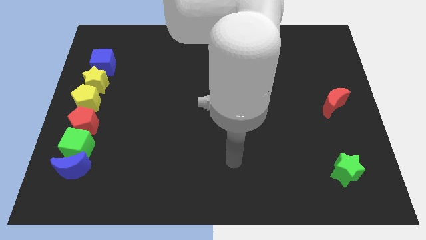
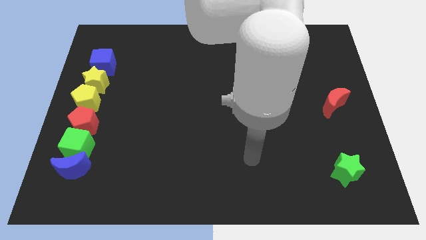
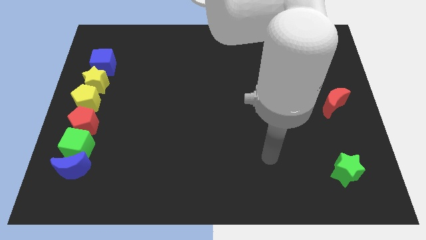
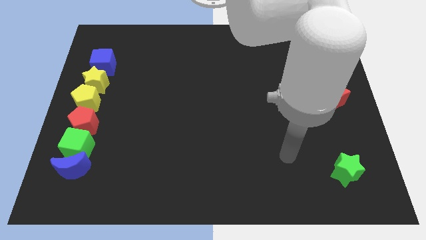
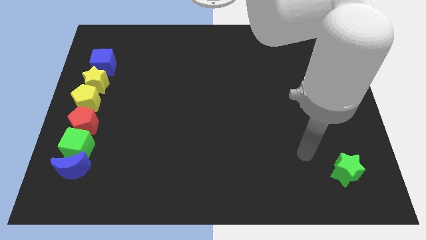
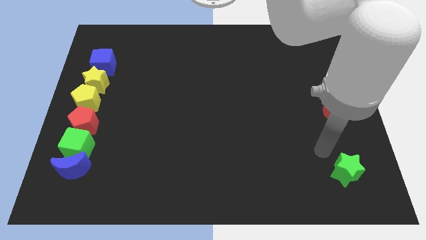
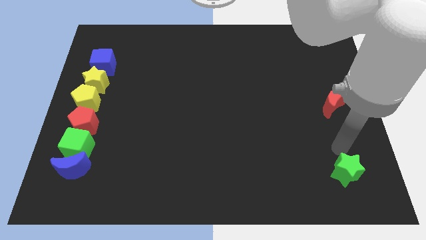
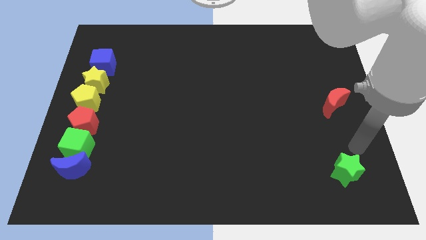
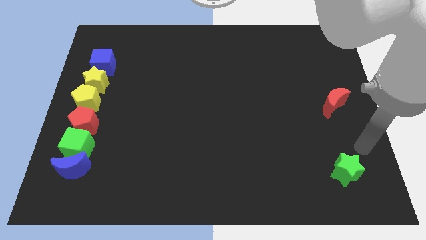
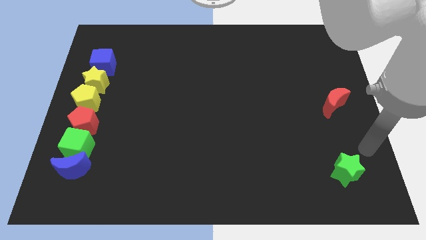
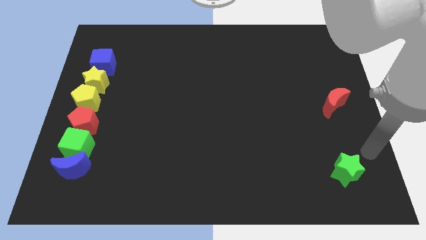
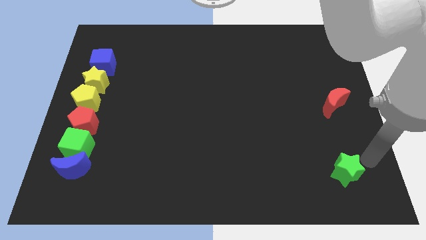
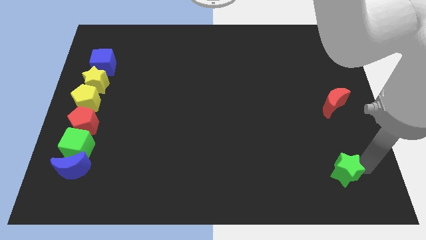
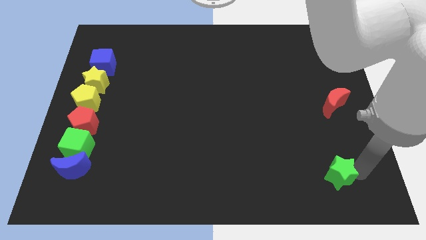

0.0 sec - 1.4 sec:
point your arm above green star

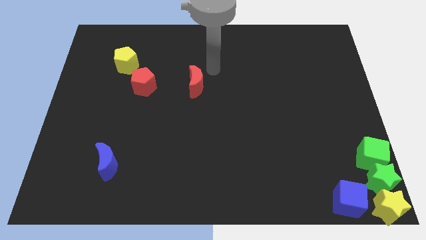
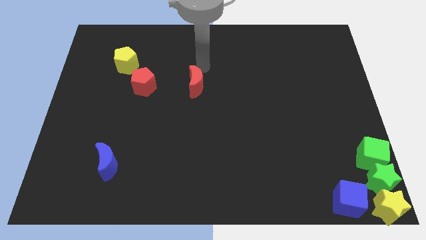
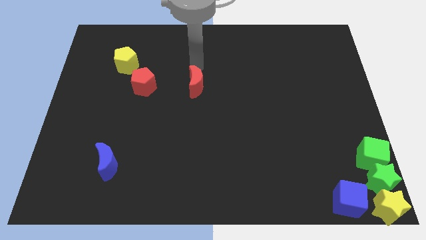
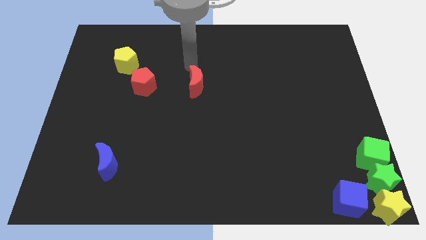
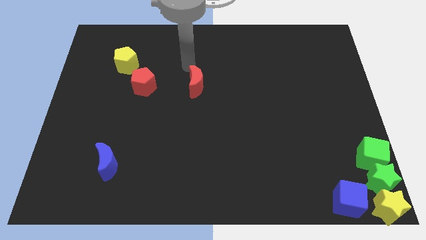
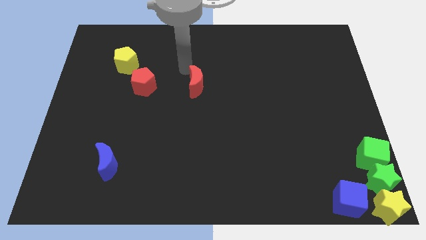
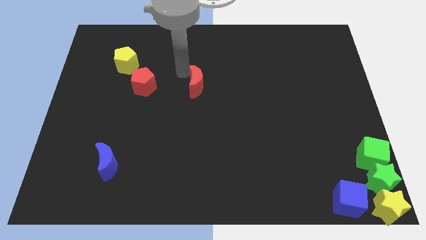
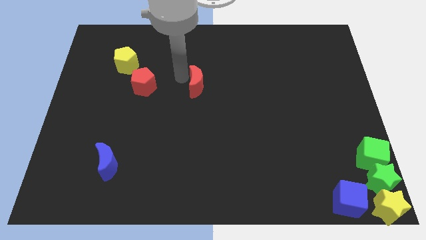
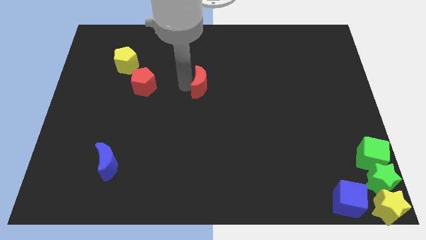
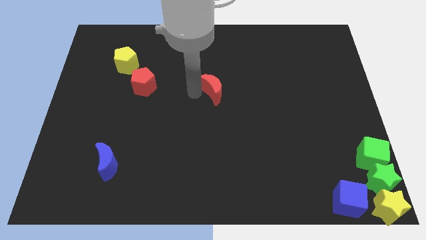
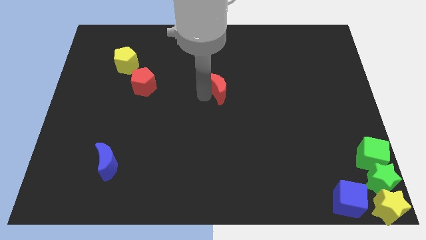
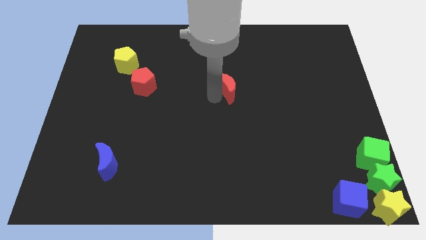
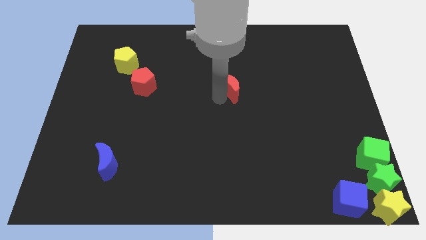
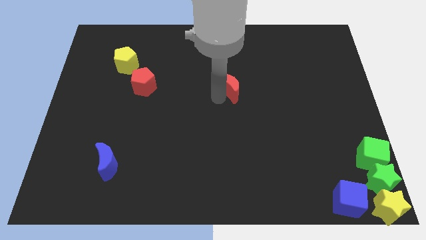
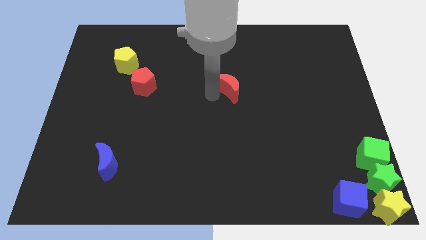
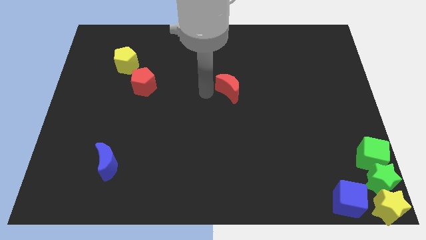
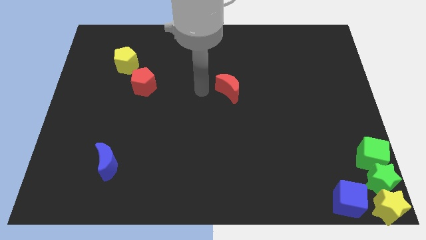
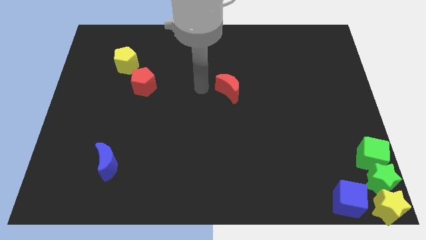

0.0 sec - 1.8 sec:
move the red moon to the center of the board

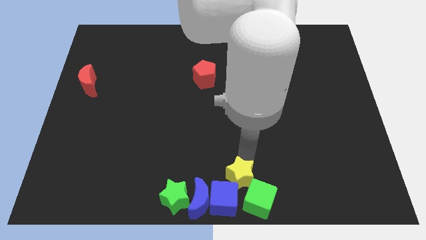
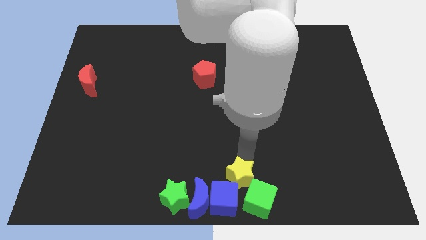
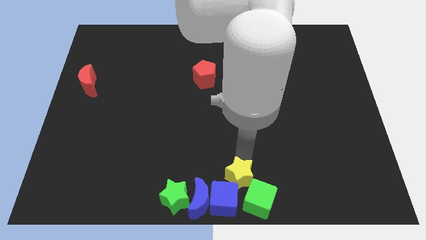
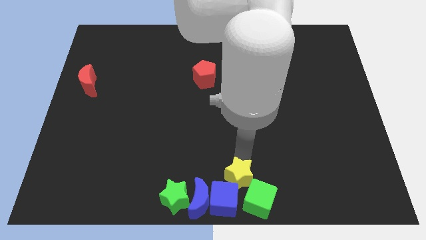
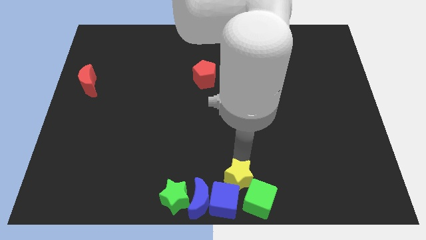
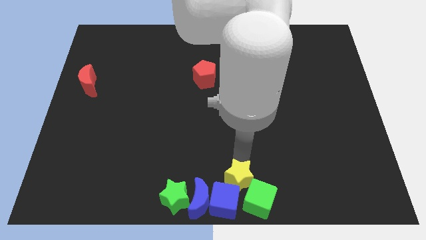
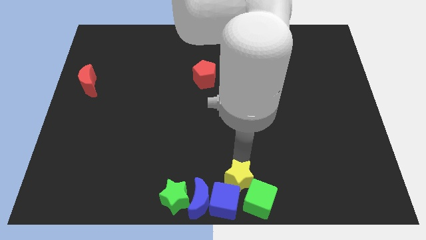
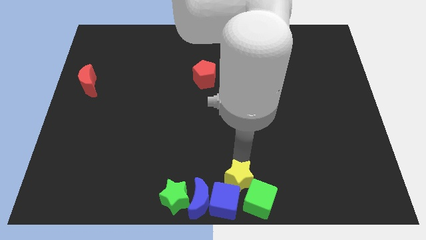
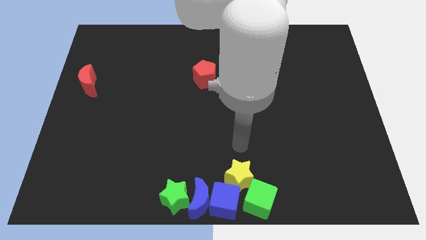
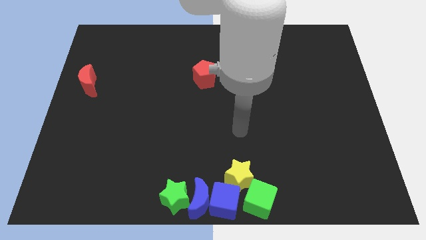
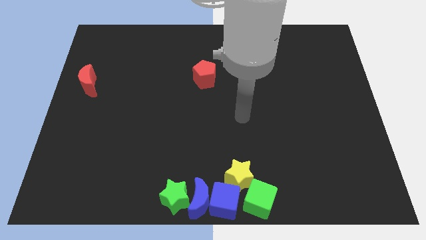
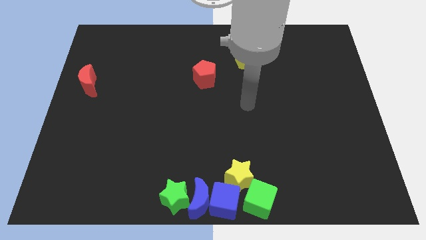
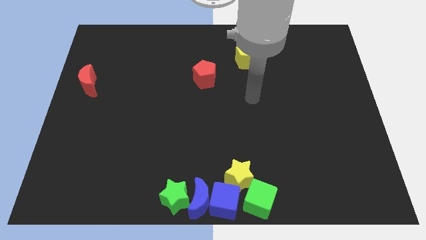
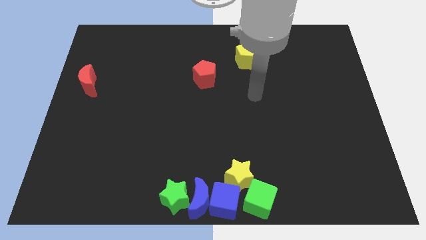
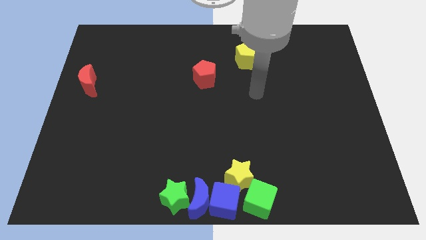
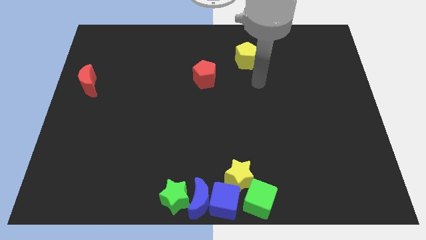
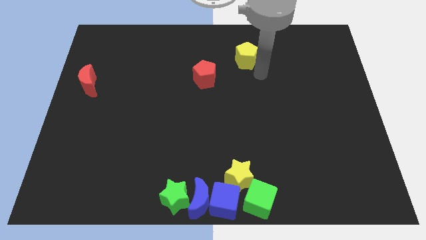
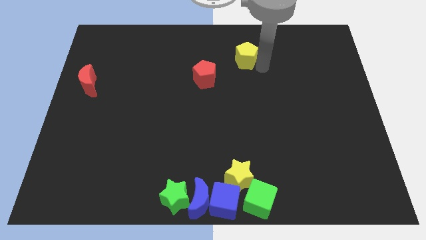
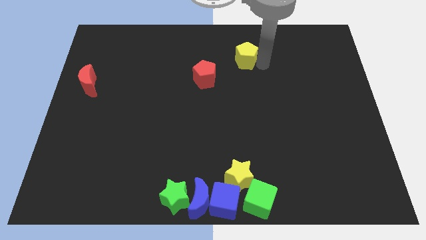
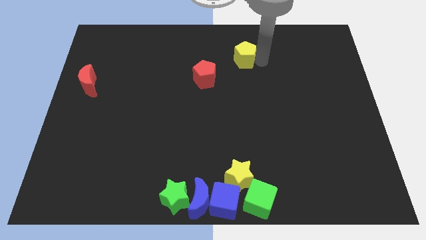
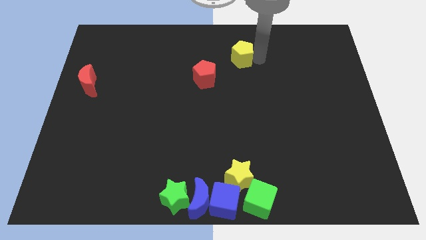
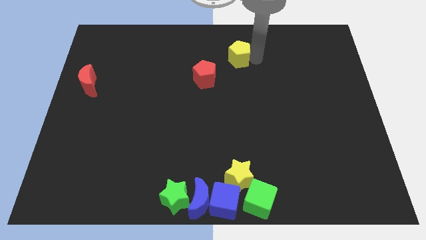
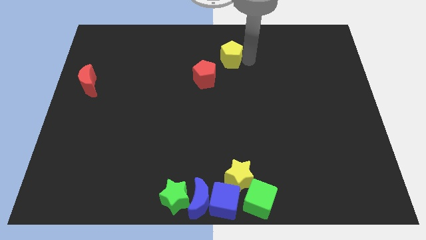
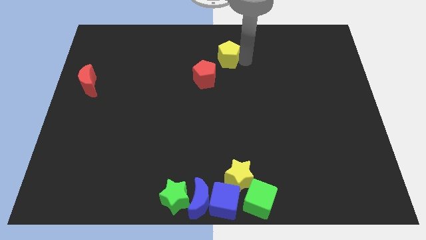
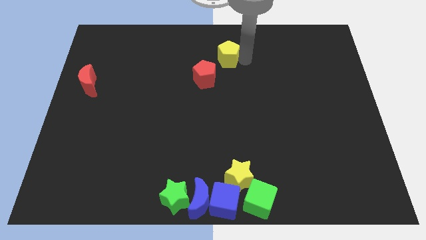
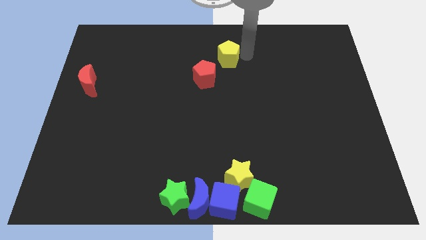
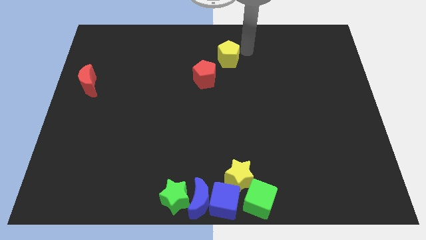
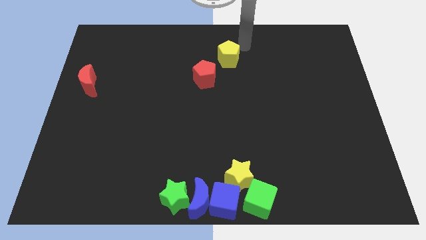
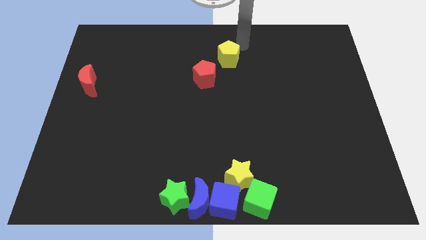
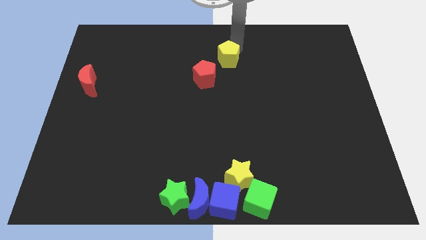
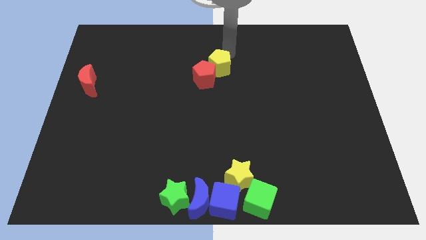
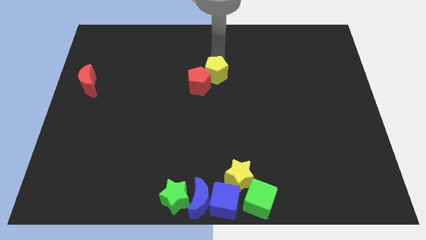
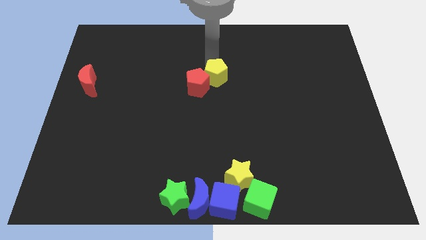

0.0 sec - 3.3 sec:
move the yellow pentagon into the red pentagon

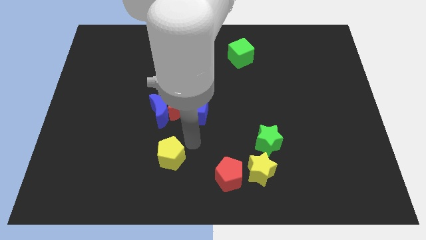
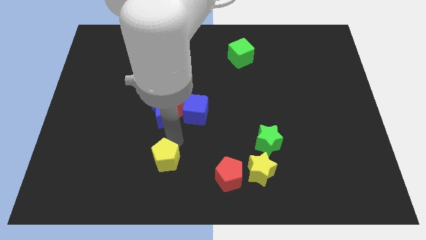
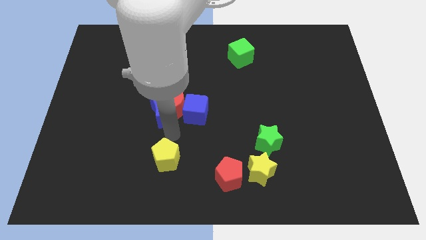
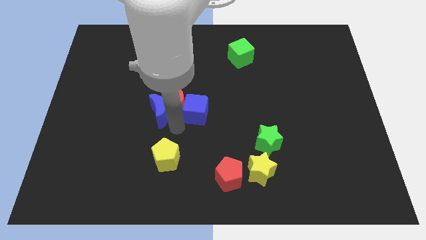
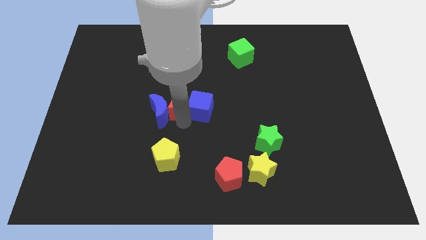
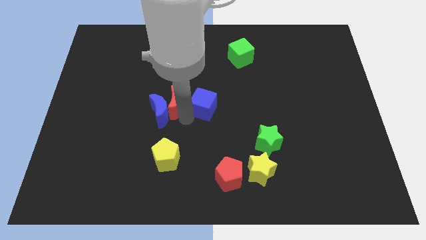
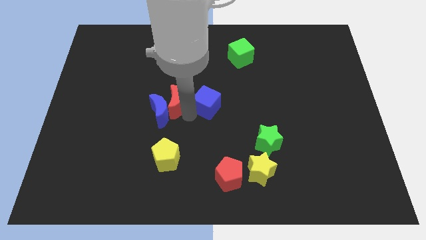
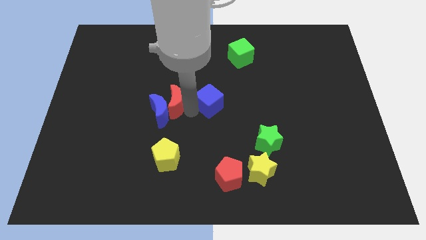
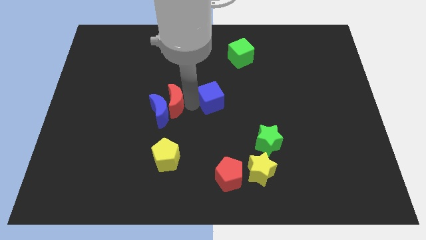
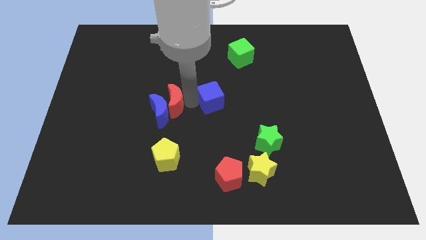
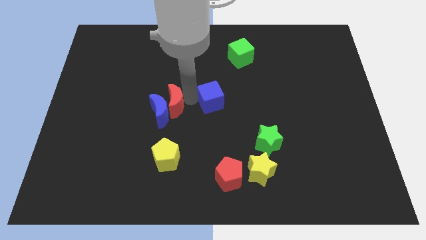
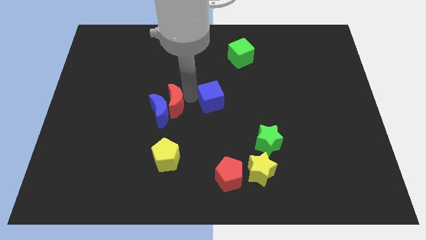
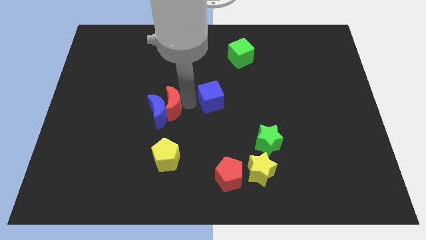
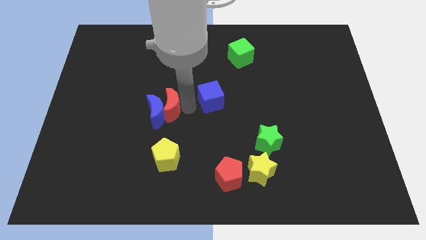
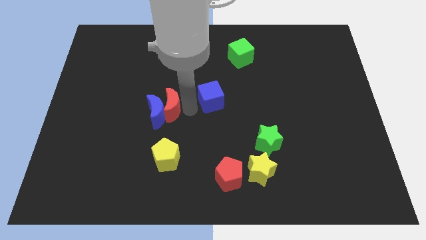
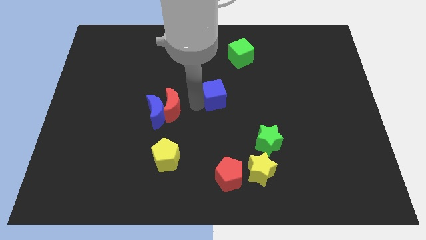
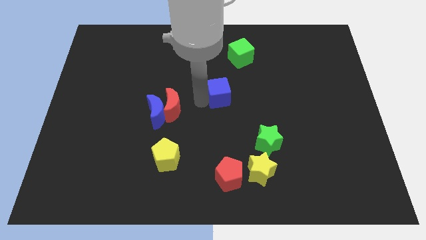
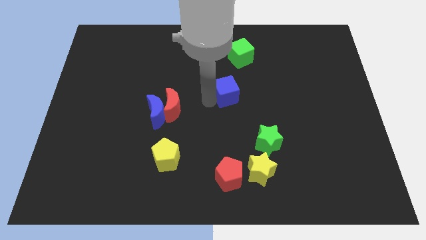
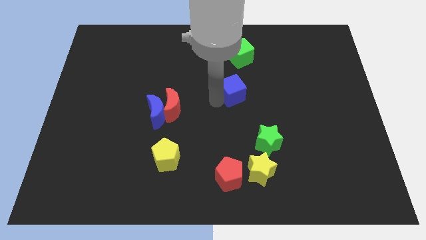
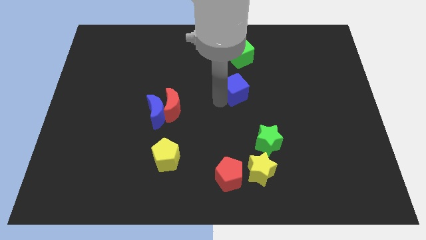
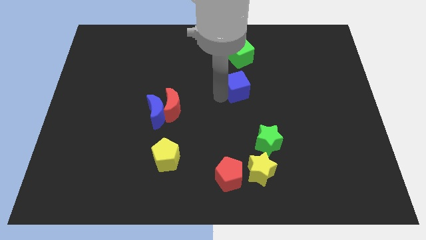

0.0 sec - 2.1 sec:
drag the blue cube diagonal to yellow pentagon

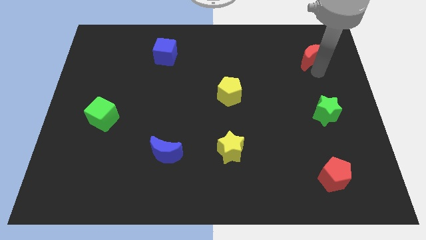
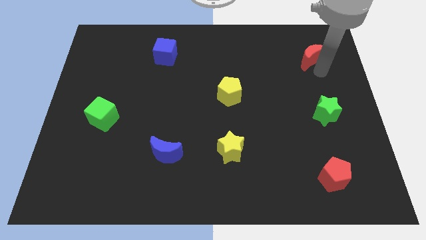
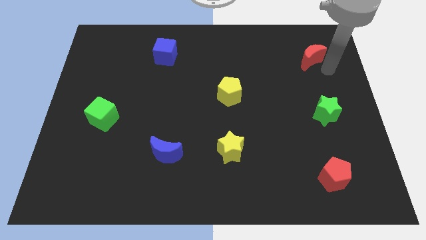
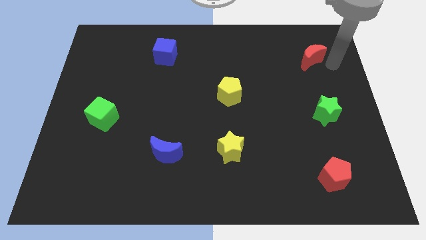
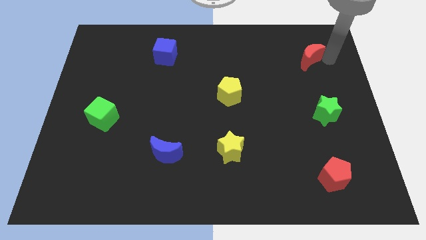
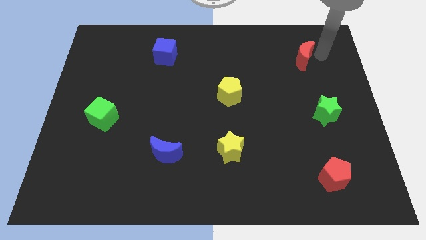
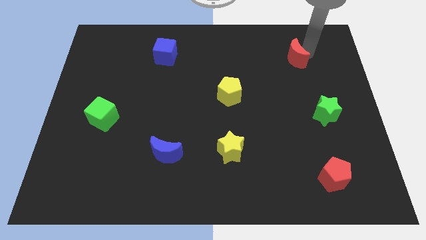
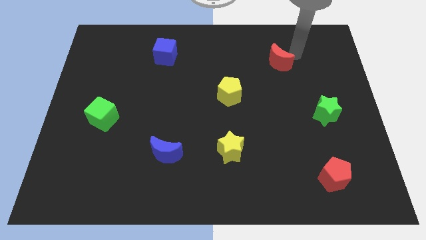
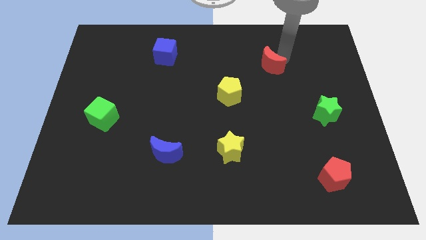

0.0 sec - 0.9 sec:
push the red moon towards the yellow pentagon
